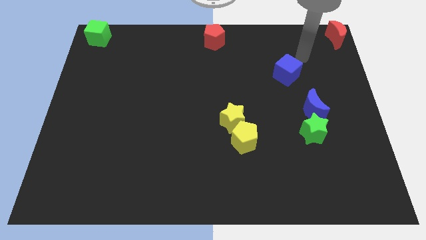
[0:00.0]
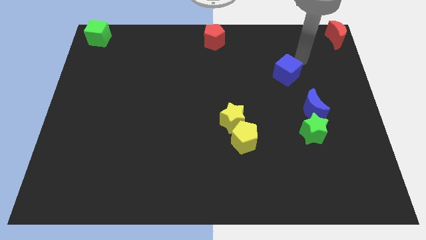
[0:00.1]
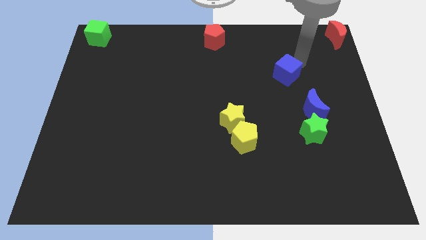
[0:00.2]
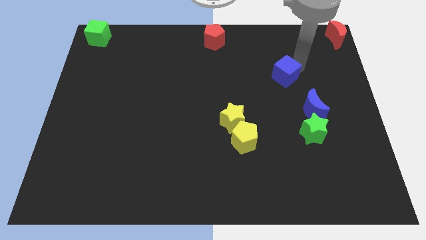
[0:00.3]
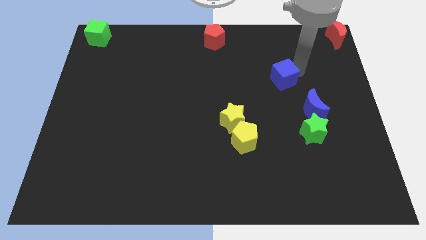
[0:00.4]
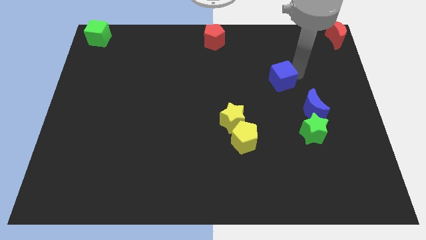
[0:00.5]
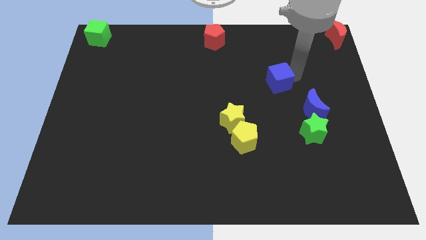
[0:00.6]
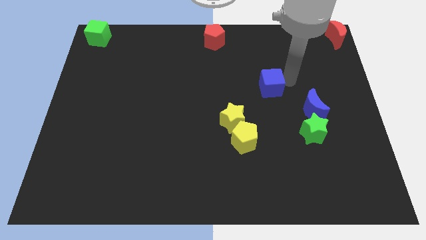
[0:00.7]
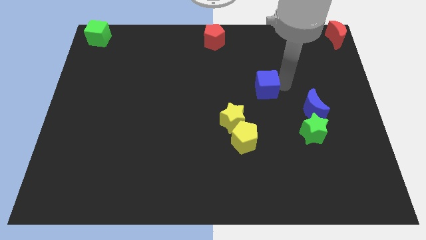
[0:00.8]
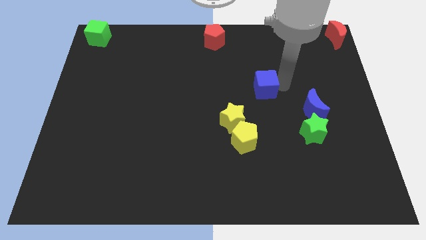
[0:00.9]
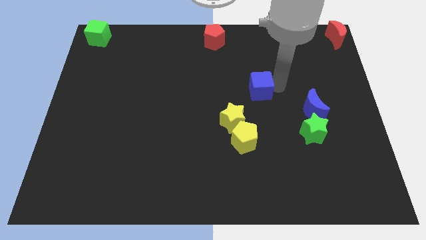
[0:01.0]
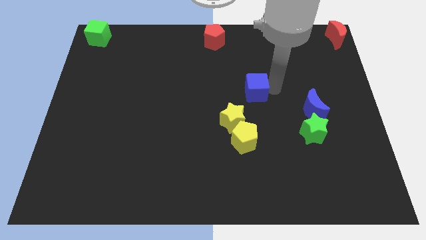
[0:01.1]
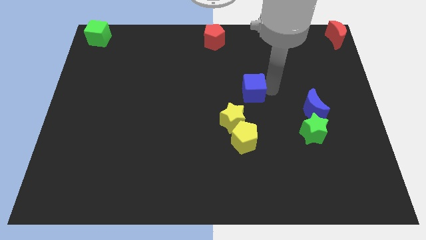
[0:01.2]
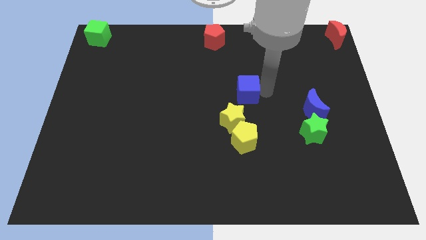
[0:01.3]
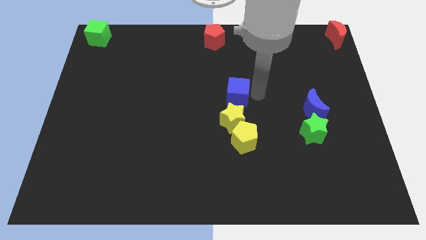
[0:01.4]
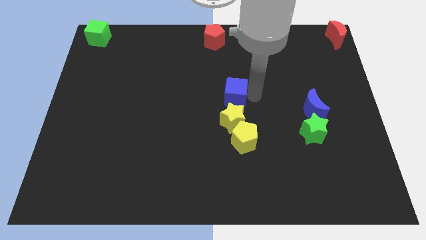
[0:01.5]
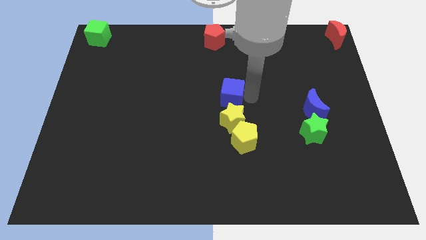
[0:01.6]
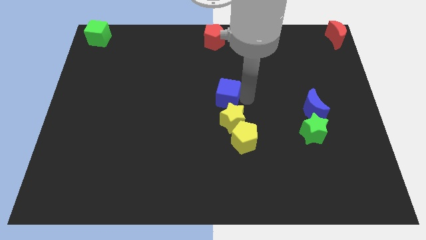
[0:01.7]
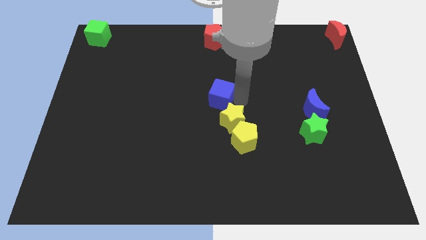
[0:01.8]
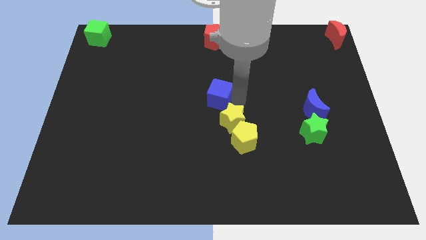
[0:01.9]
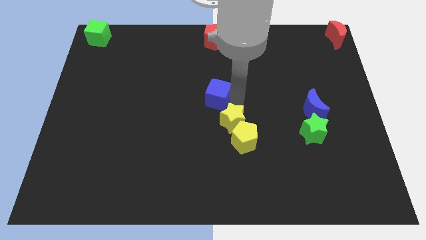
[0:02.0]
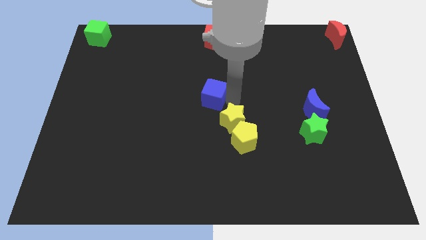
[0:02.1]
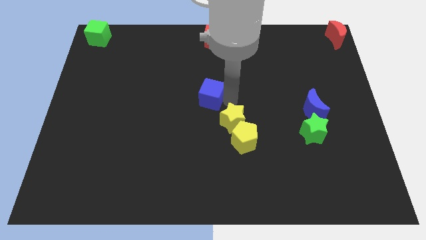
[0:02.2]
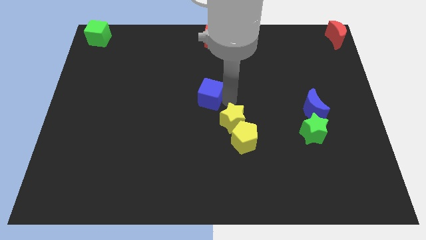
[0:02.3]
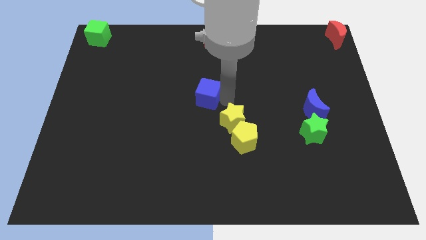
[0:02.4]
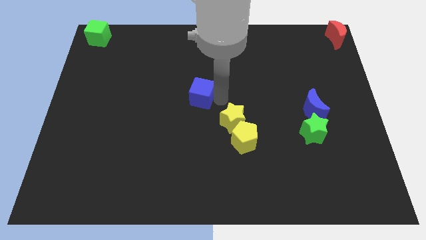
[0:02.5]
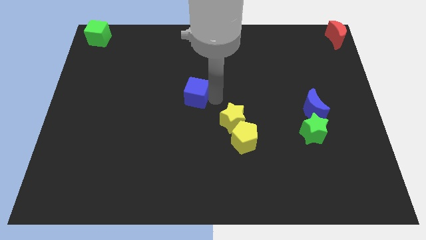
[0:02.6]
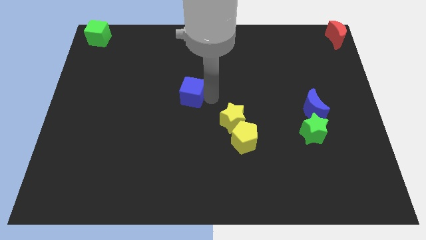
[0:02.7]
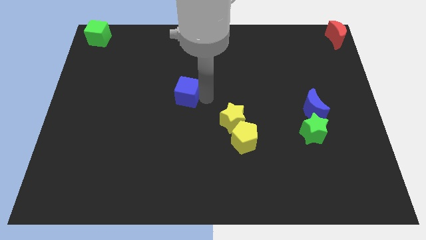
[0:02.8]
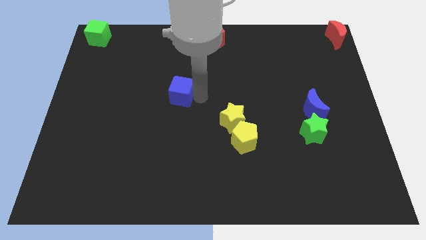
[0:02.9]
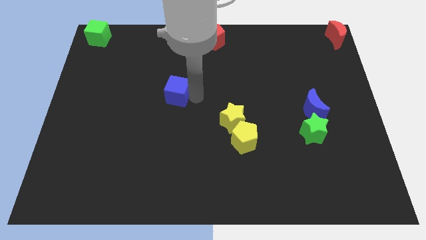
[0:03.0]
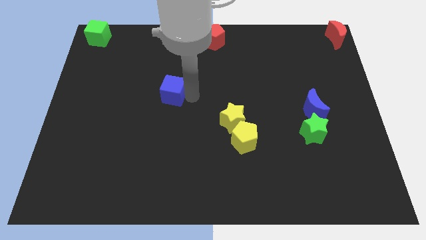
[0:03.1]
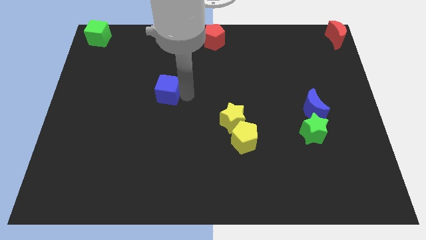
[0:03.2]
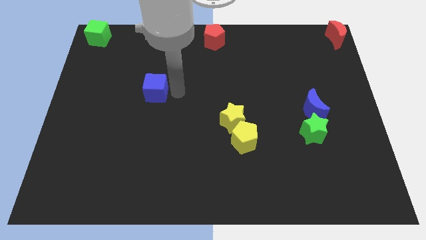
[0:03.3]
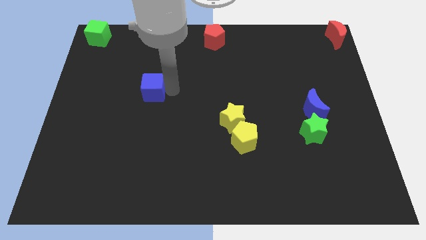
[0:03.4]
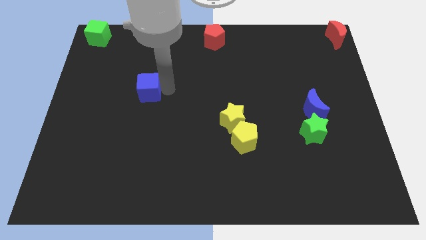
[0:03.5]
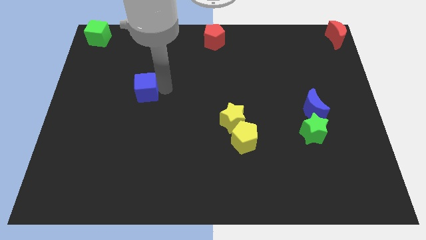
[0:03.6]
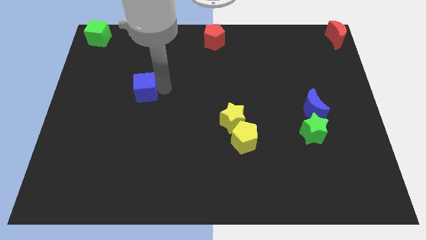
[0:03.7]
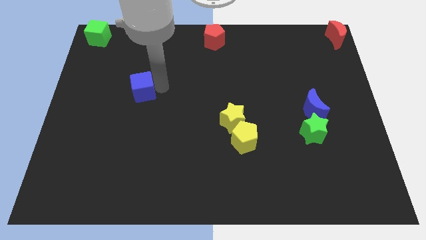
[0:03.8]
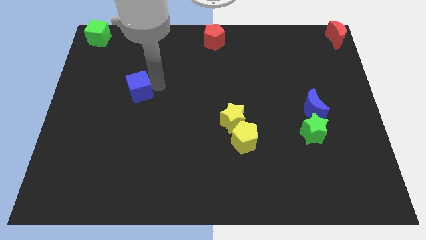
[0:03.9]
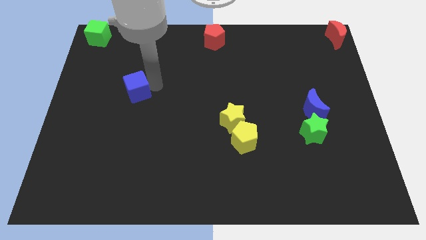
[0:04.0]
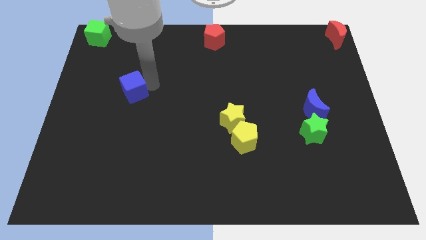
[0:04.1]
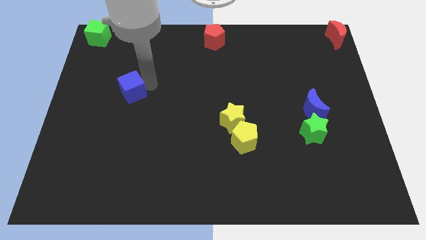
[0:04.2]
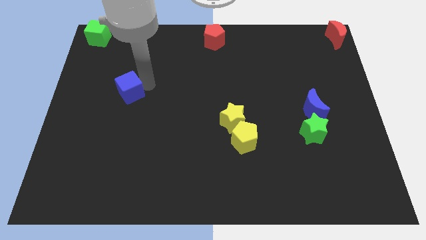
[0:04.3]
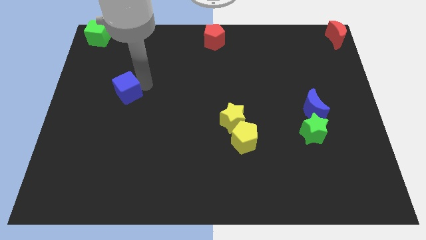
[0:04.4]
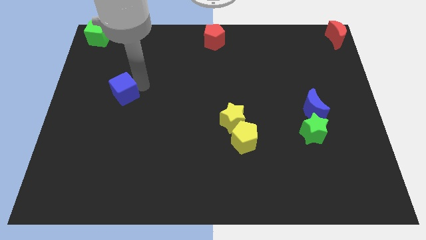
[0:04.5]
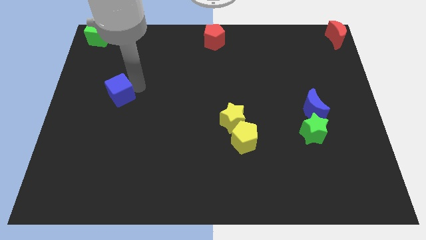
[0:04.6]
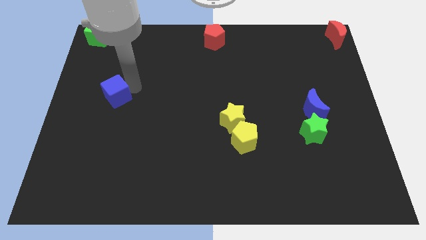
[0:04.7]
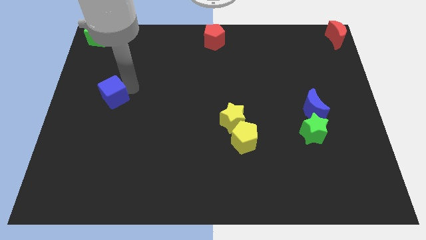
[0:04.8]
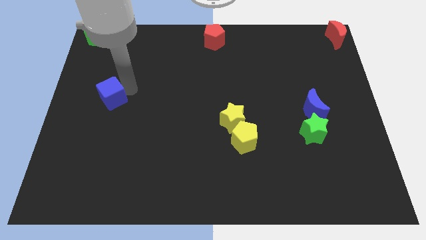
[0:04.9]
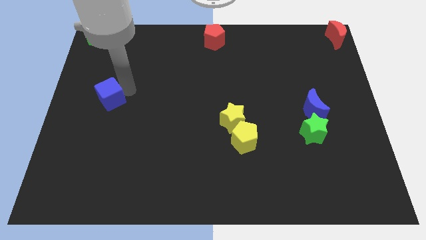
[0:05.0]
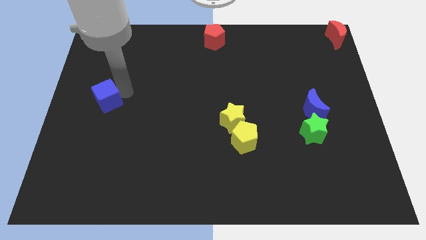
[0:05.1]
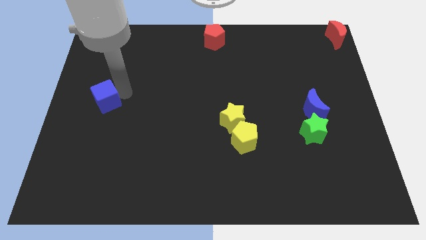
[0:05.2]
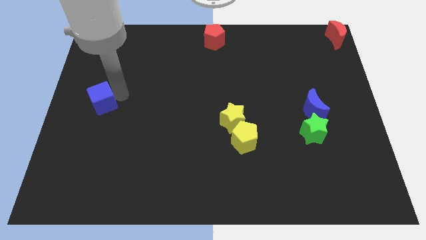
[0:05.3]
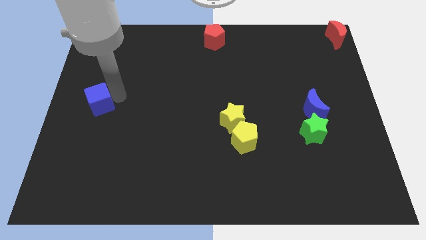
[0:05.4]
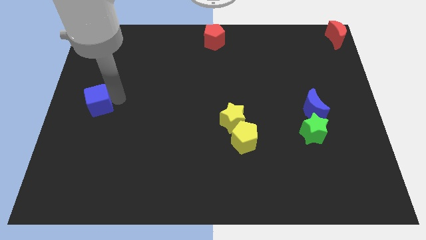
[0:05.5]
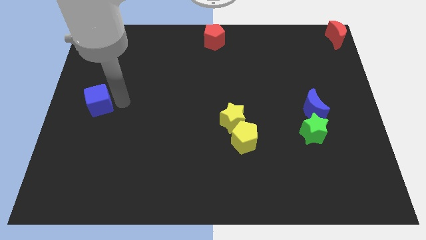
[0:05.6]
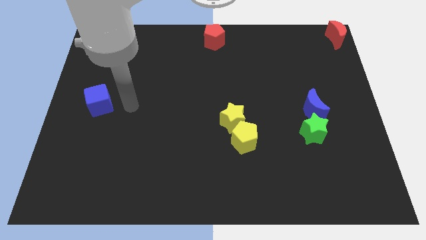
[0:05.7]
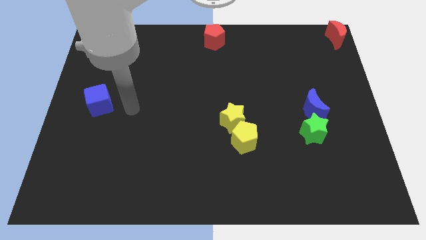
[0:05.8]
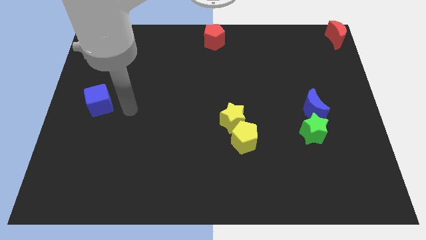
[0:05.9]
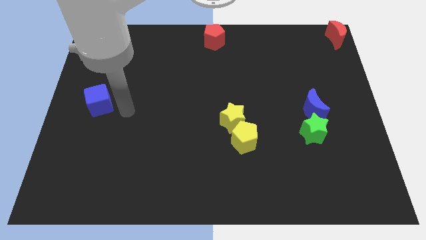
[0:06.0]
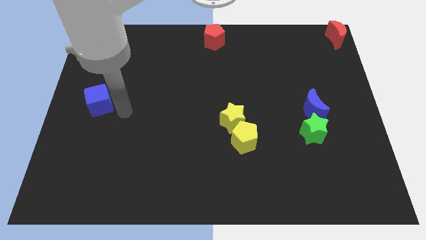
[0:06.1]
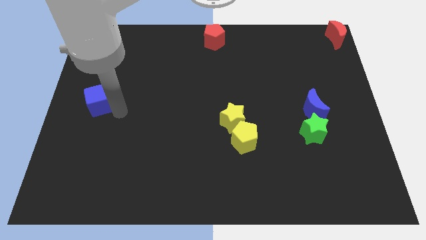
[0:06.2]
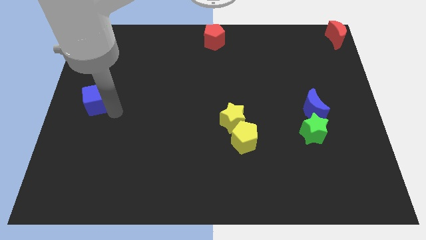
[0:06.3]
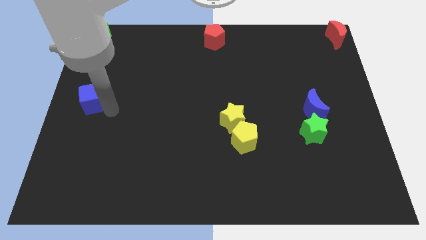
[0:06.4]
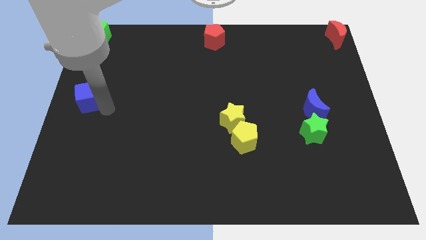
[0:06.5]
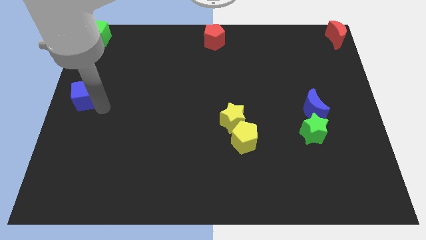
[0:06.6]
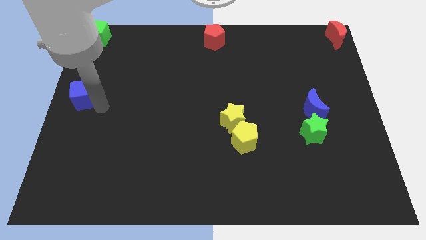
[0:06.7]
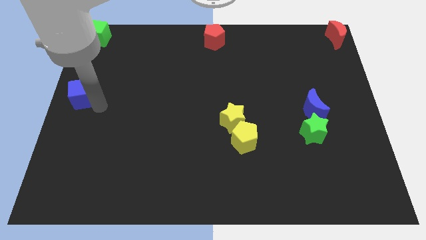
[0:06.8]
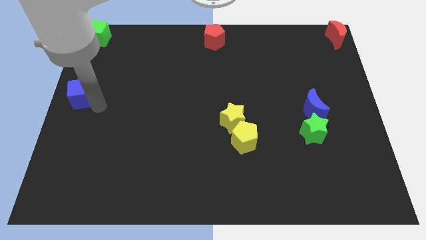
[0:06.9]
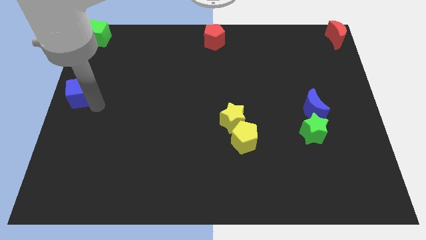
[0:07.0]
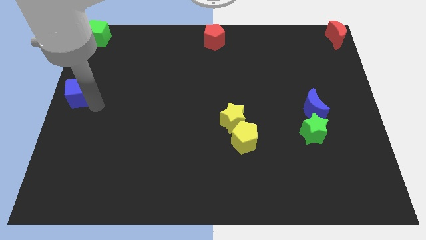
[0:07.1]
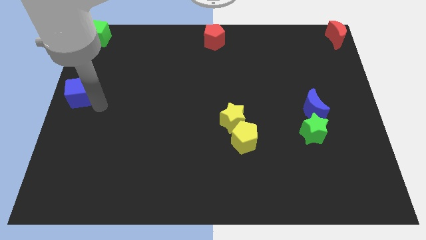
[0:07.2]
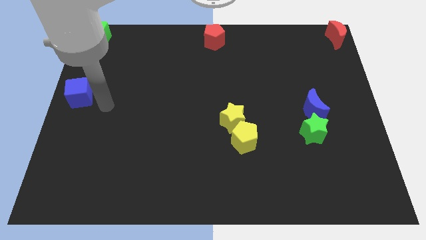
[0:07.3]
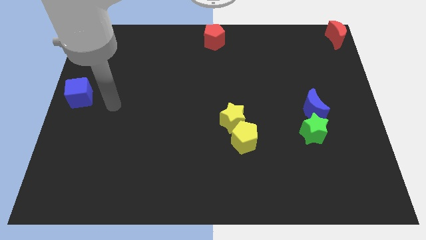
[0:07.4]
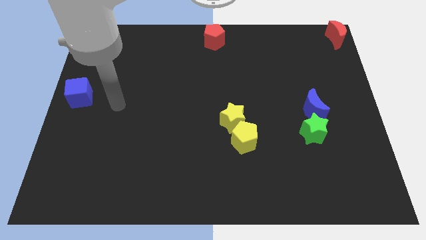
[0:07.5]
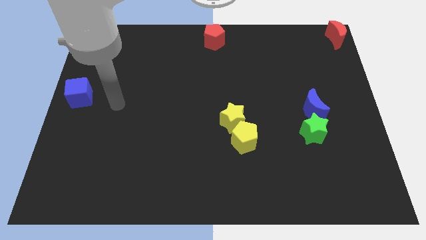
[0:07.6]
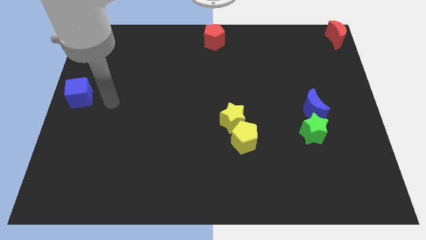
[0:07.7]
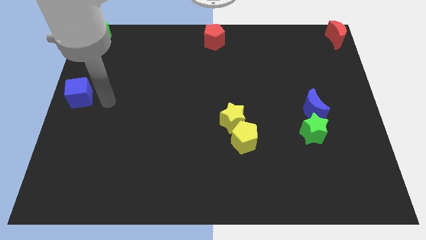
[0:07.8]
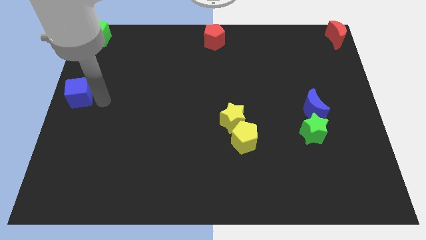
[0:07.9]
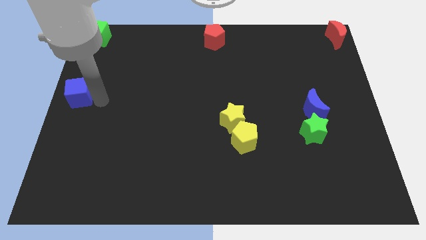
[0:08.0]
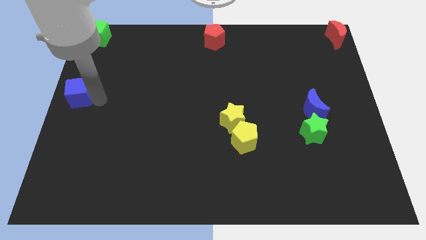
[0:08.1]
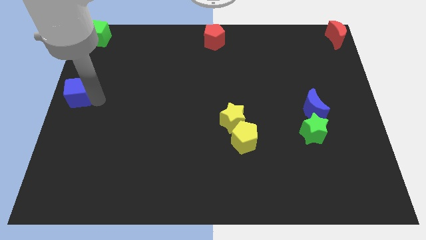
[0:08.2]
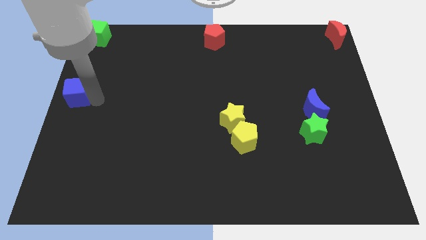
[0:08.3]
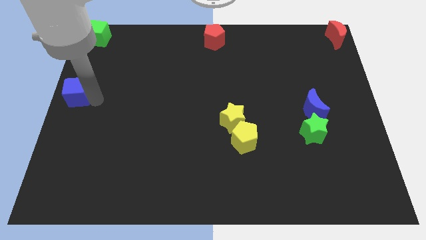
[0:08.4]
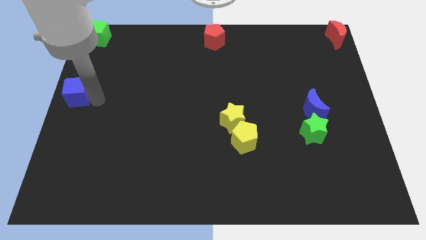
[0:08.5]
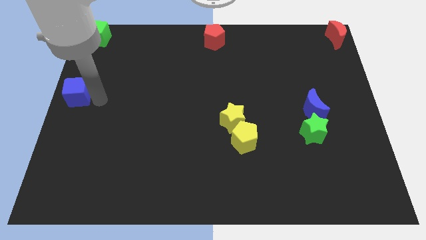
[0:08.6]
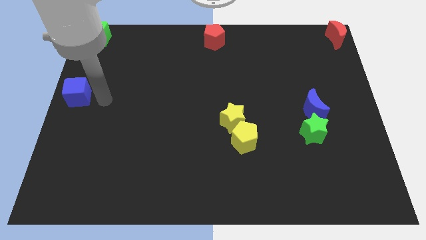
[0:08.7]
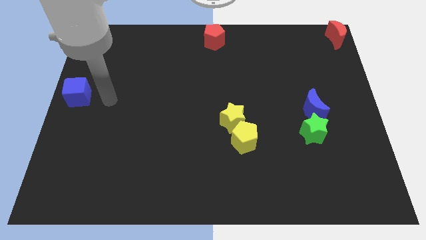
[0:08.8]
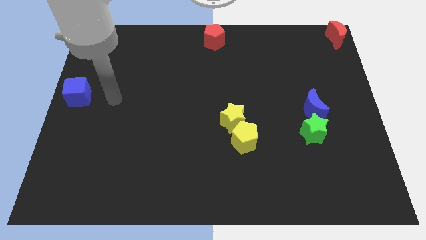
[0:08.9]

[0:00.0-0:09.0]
move the blue cube to the left center of the board

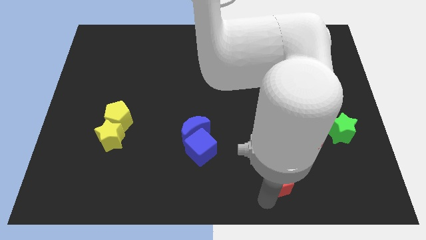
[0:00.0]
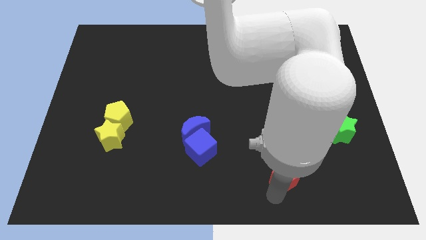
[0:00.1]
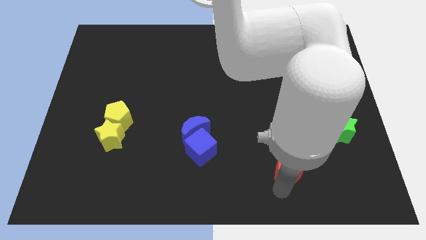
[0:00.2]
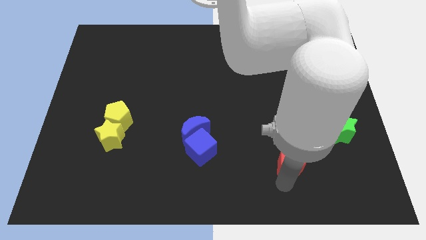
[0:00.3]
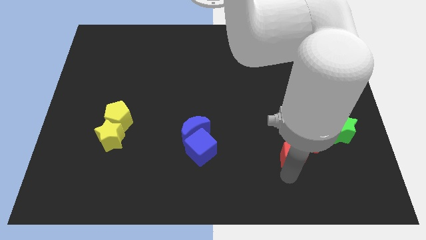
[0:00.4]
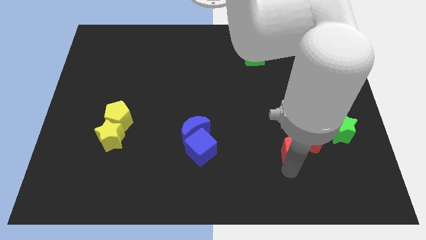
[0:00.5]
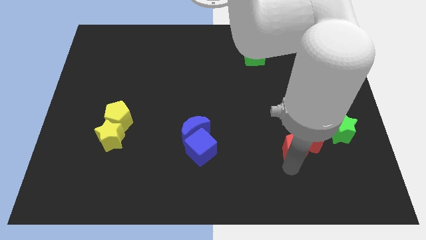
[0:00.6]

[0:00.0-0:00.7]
push the red pentagon to the left of the red crescent
